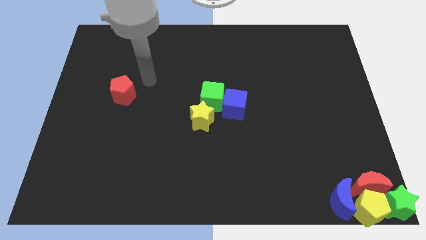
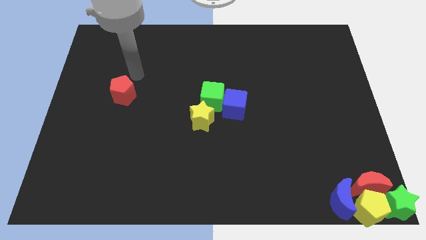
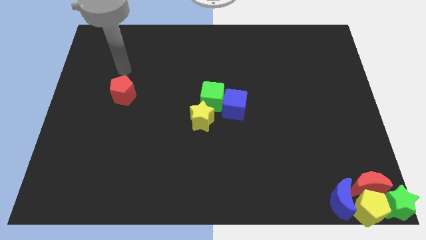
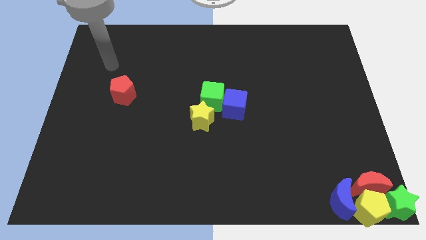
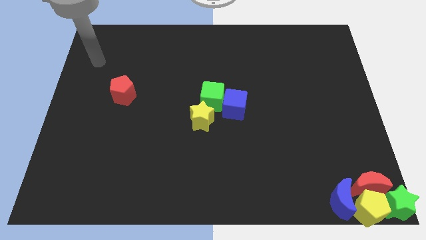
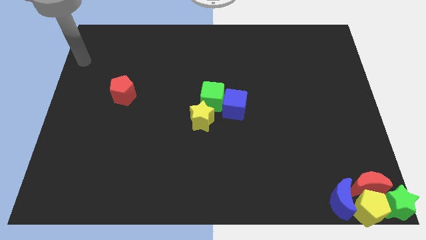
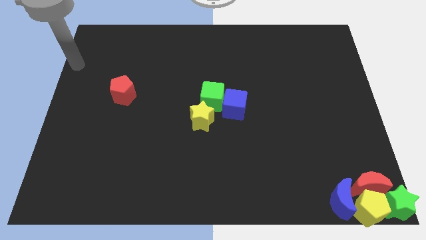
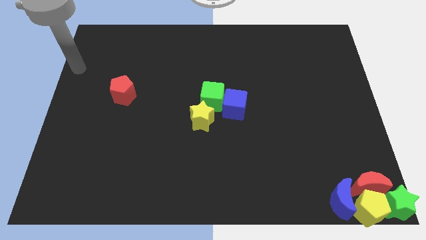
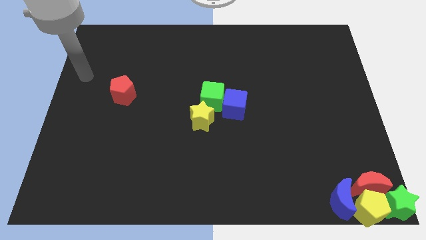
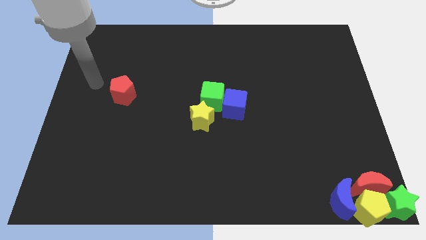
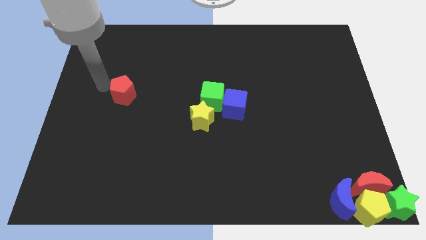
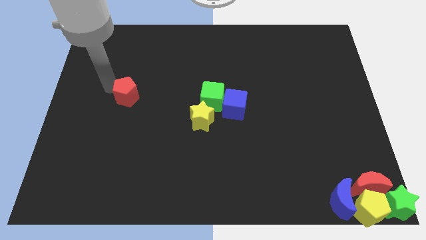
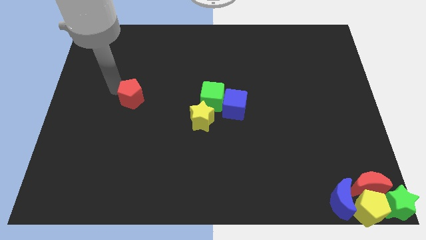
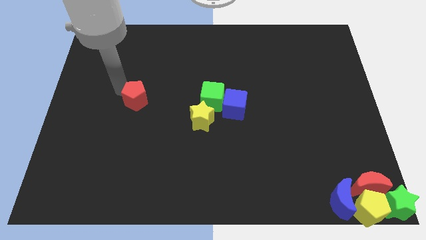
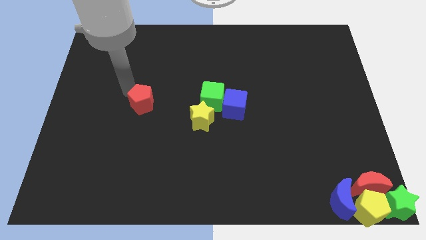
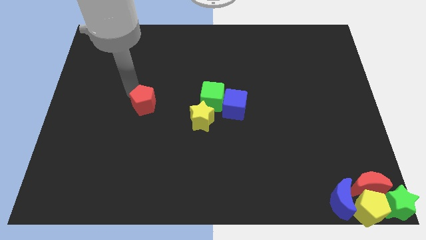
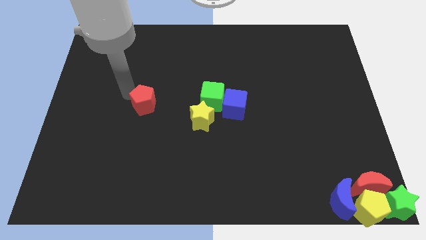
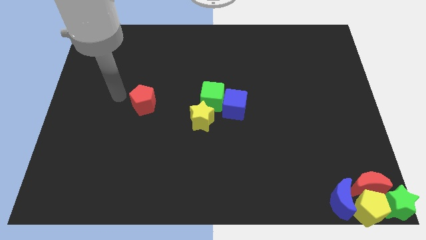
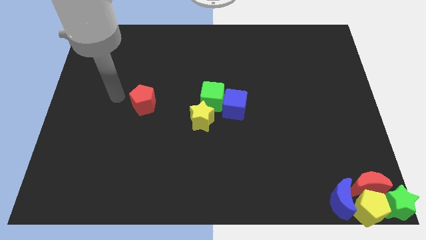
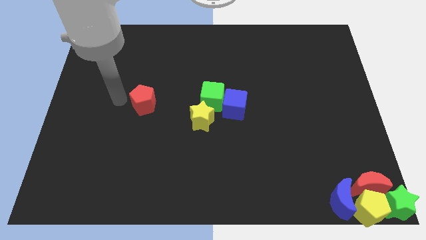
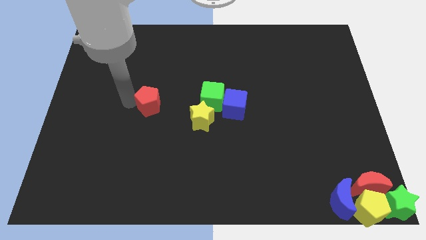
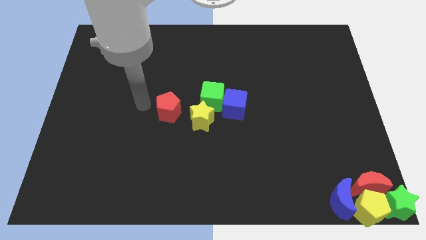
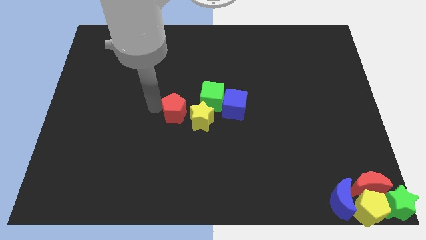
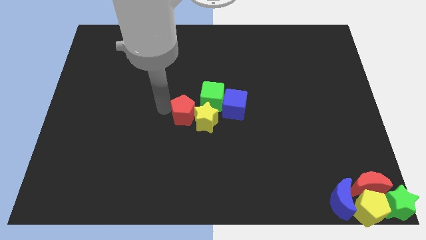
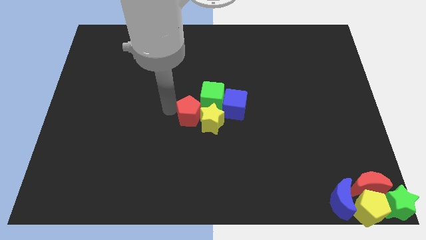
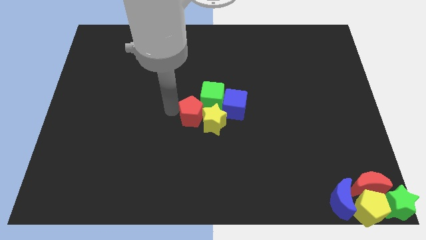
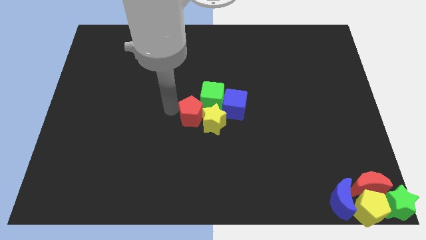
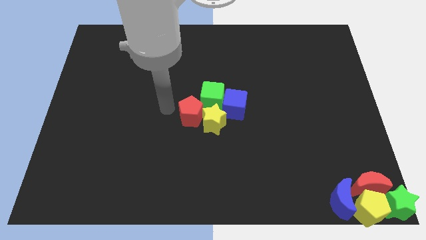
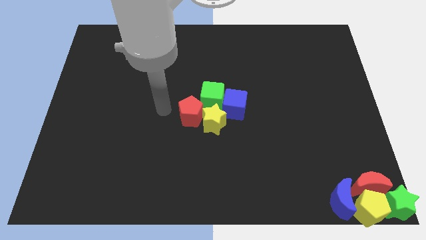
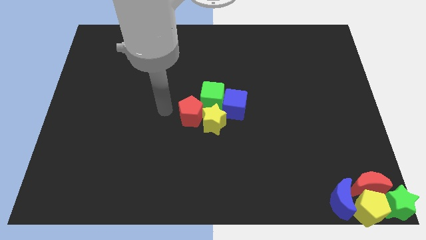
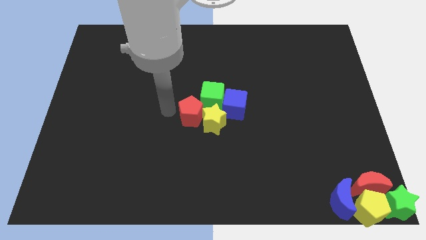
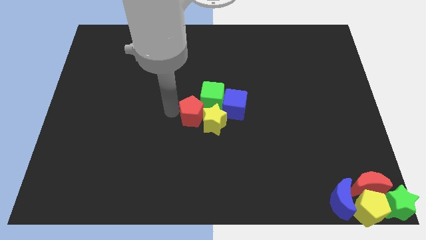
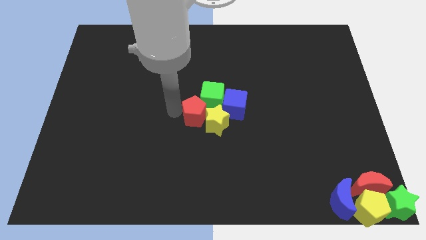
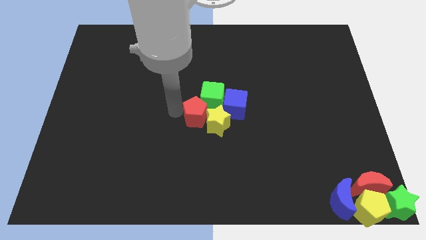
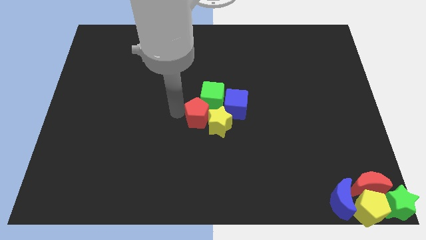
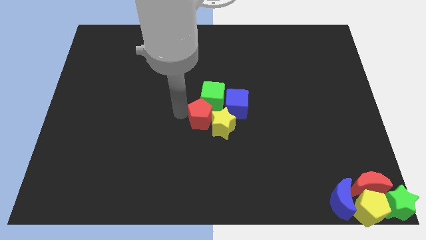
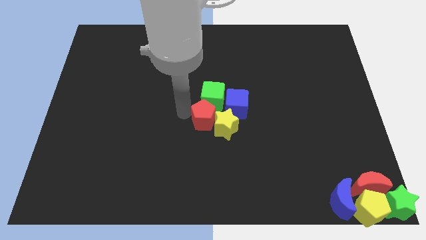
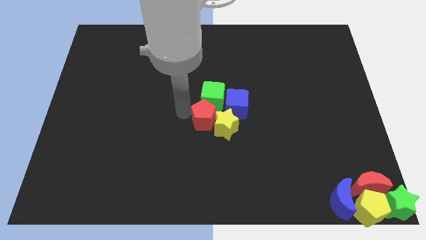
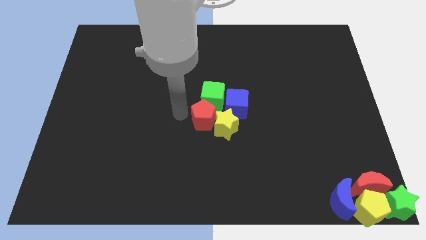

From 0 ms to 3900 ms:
move the red pentagon and yellow star slightly right

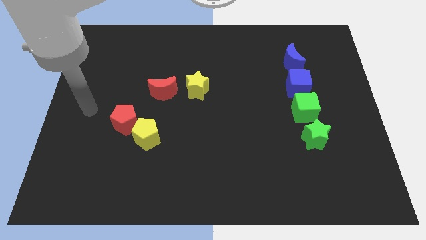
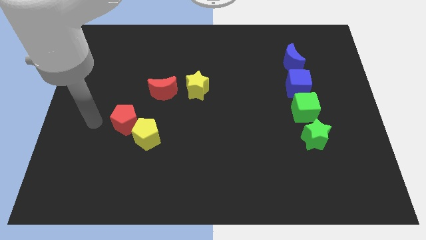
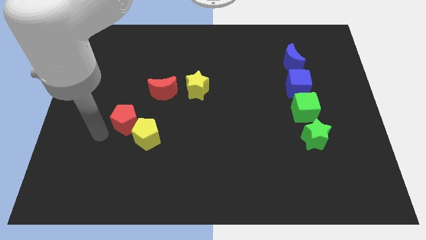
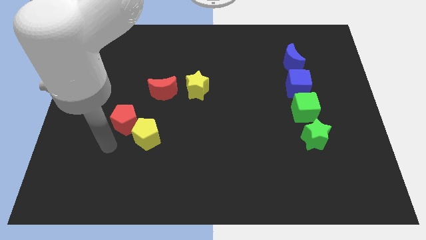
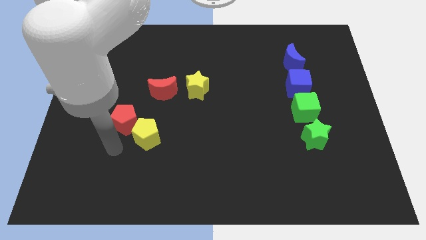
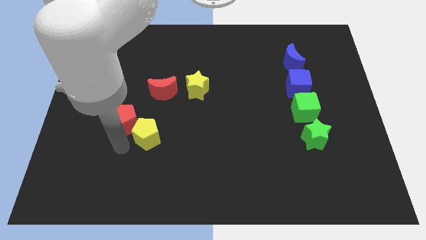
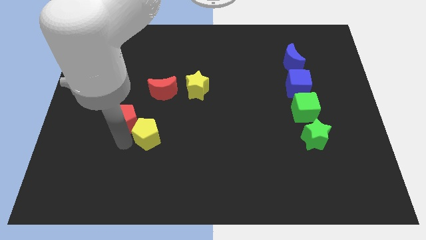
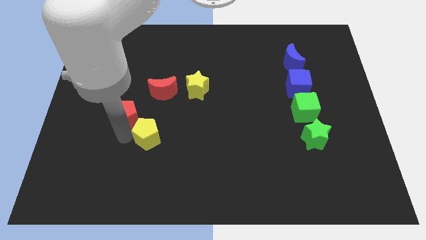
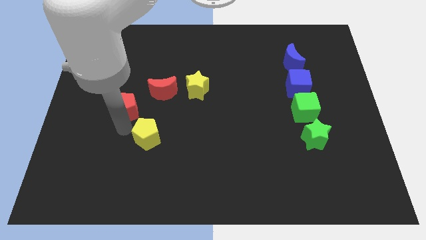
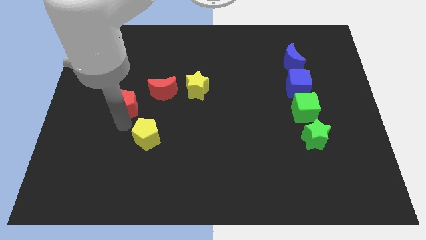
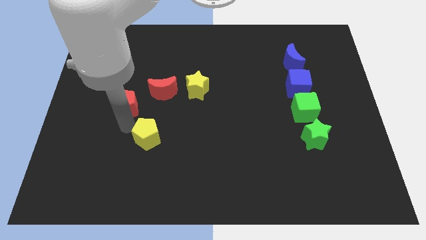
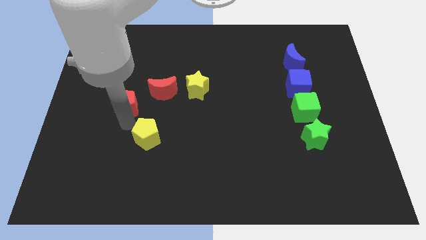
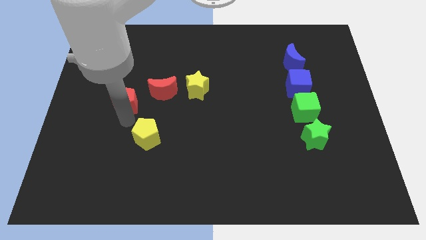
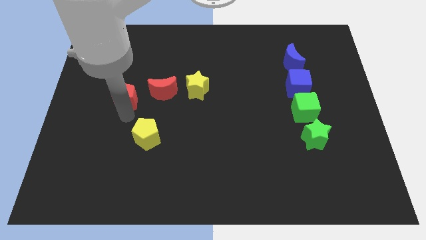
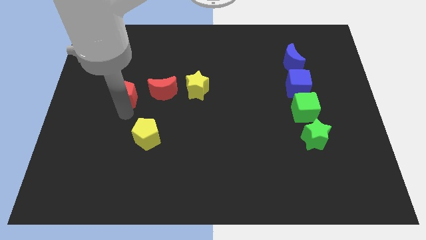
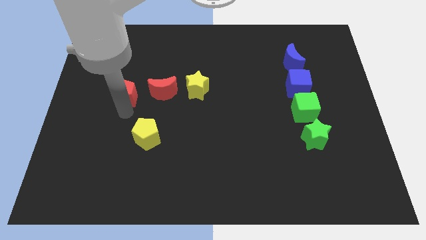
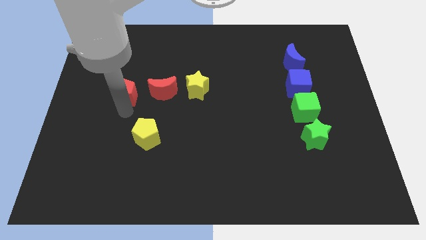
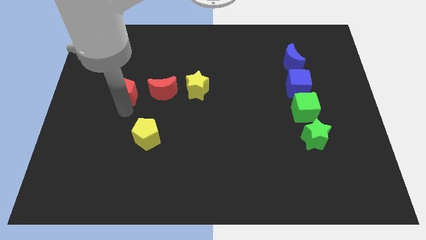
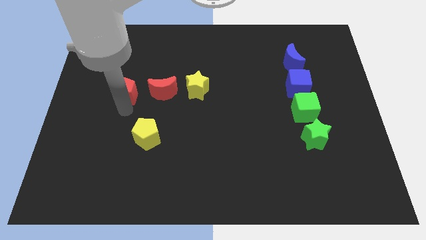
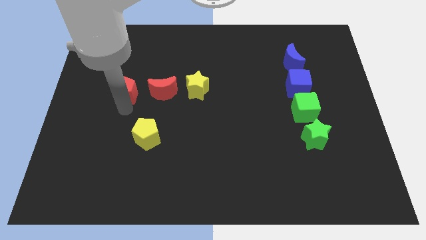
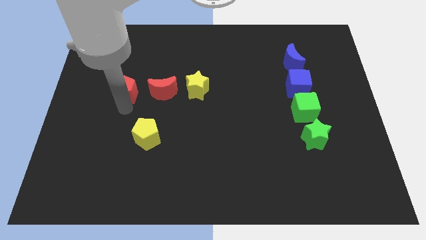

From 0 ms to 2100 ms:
slide the red pentagon slightly upwards

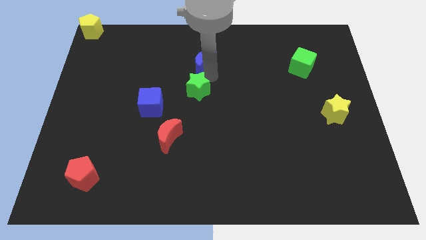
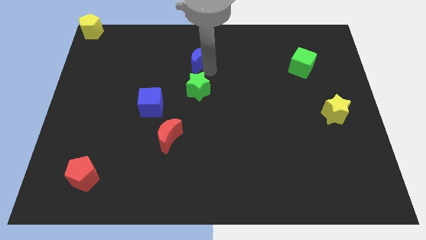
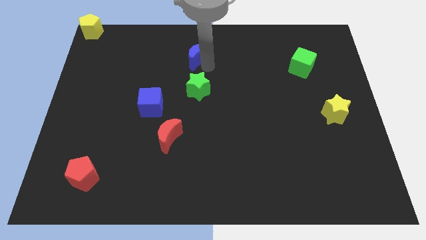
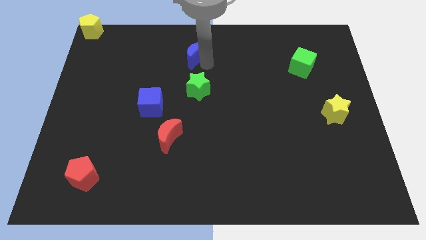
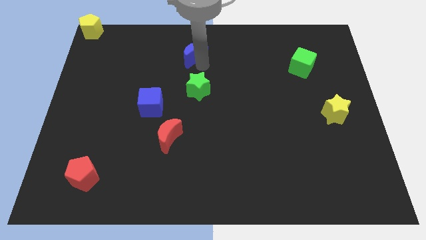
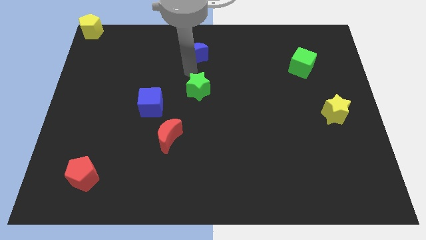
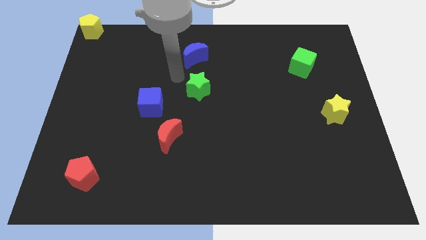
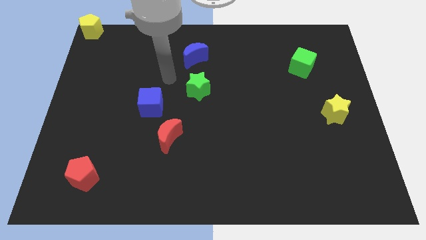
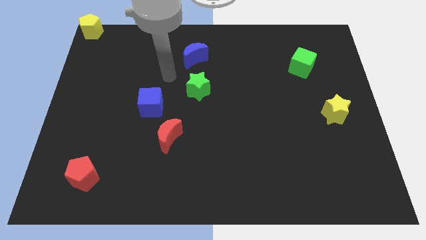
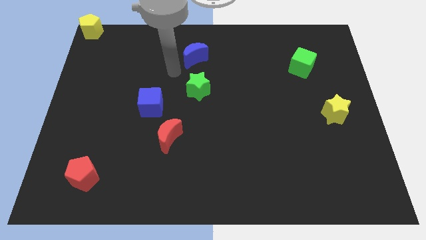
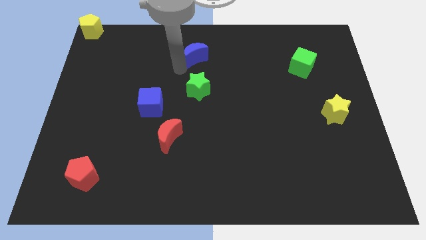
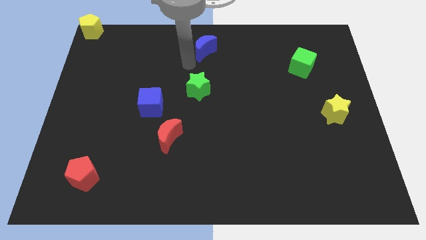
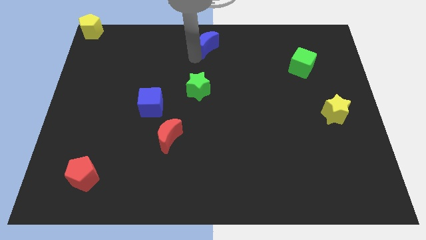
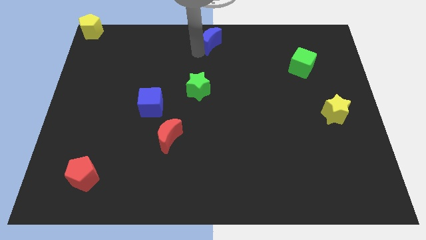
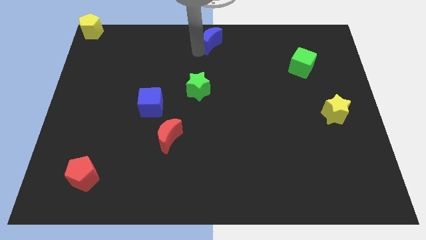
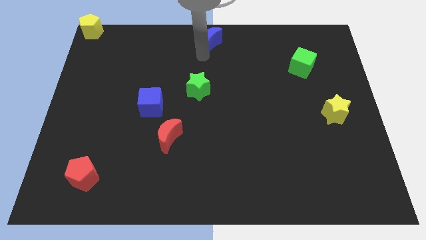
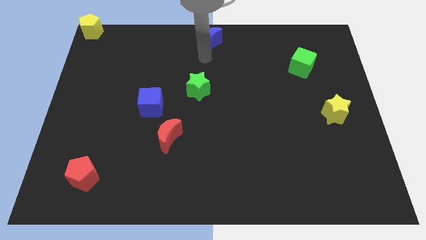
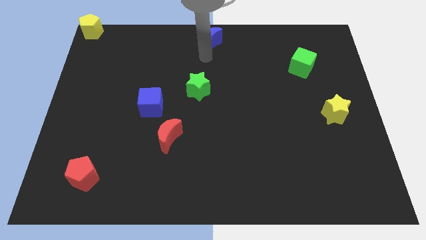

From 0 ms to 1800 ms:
slide the blue moon to the top center

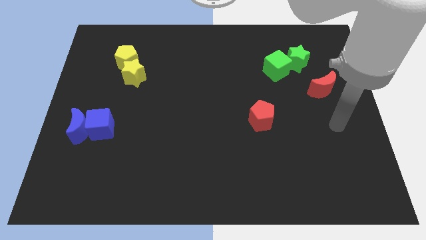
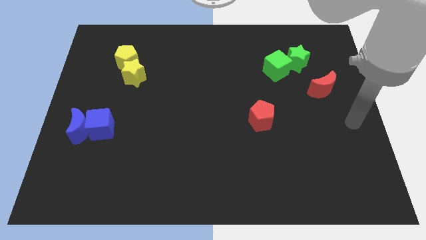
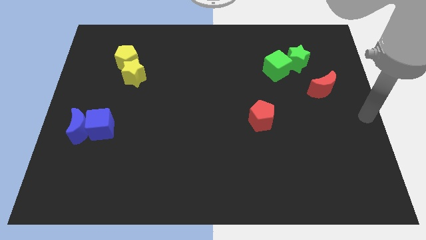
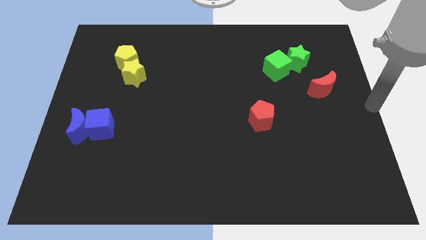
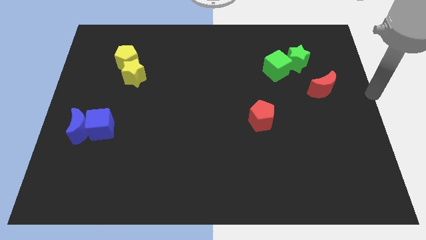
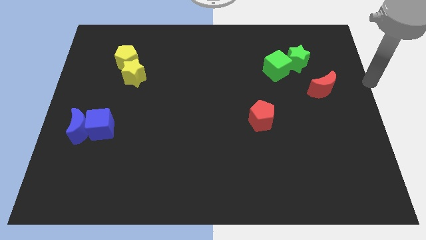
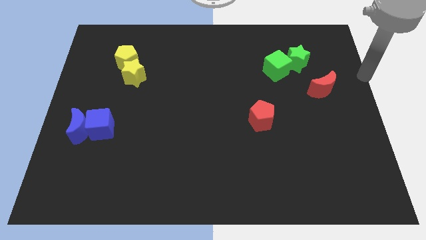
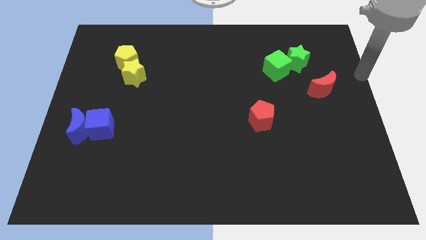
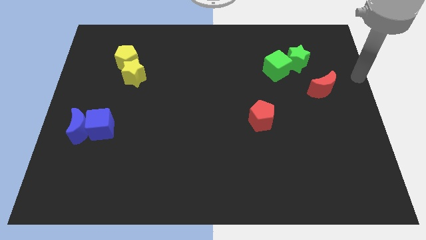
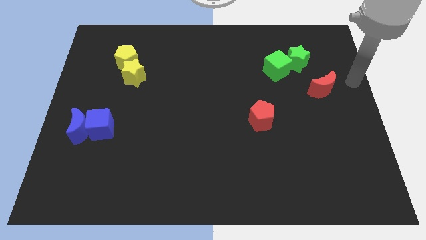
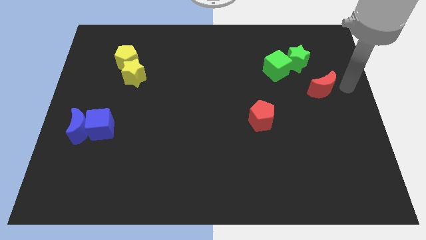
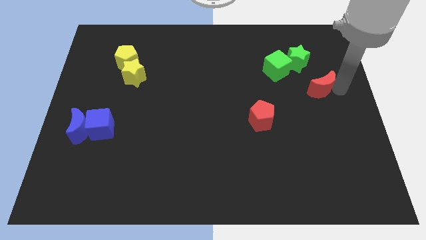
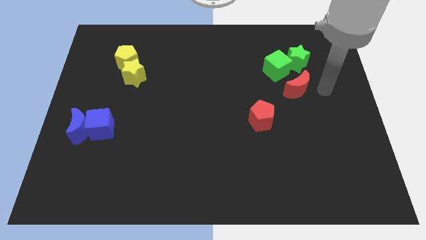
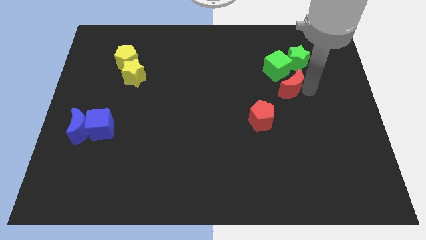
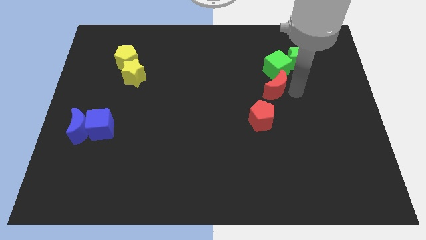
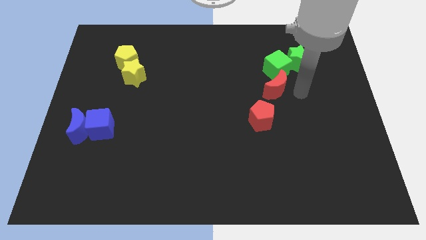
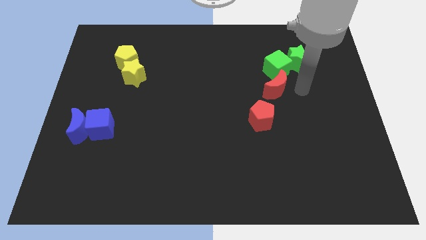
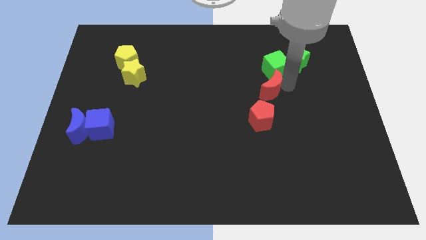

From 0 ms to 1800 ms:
move red moon below the green cube
